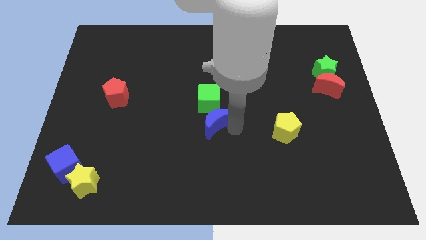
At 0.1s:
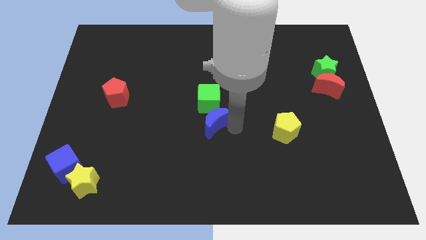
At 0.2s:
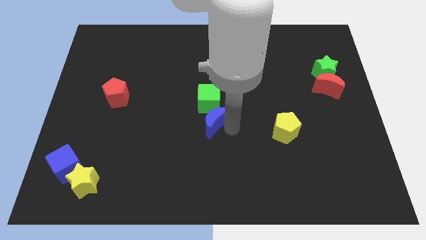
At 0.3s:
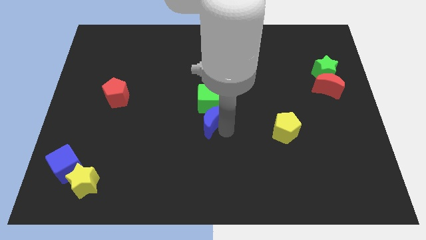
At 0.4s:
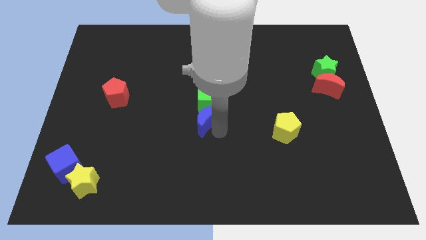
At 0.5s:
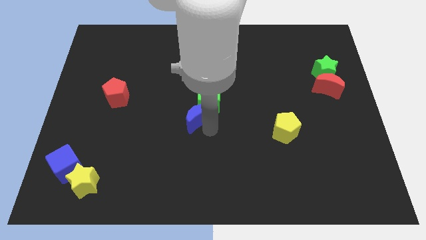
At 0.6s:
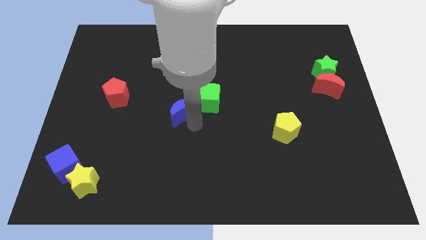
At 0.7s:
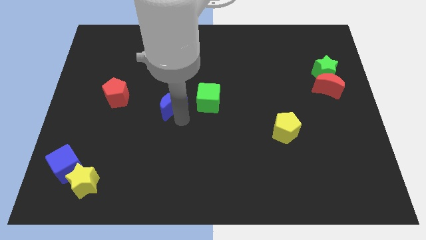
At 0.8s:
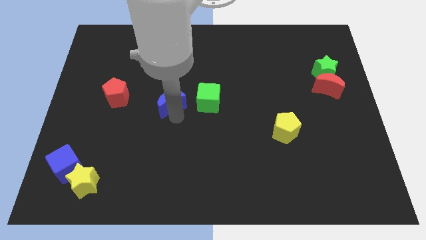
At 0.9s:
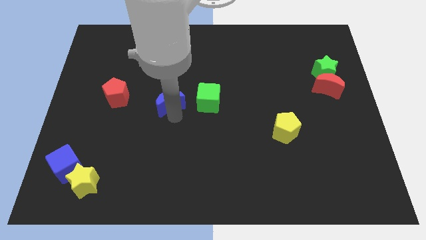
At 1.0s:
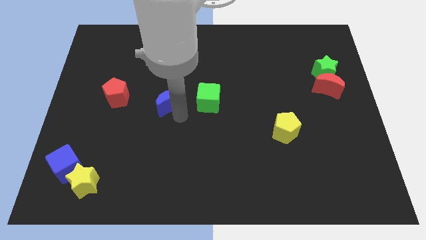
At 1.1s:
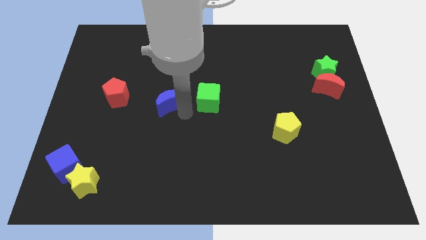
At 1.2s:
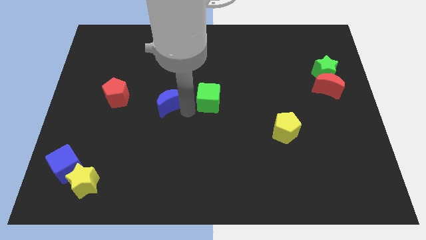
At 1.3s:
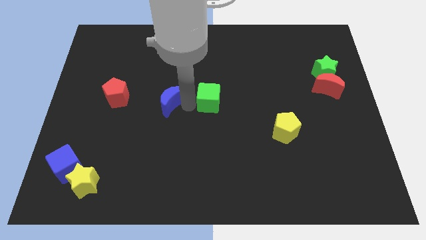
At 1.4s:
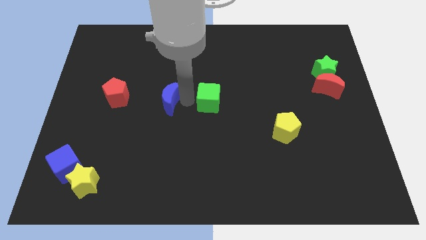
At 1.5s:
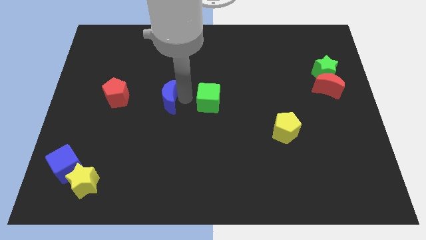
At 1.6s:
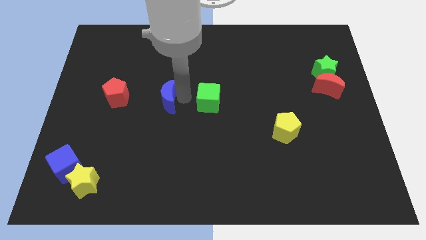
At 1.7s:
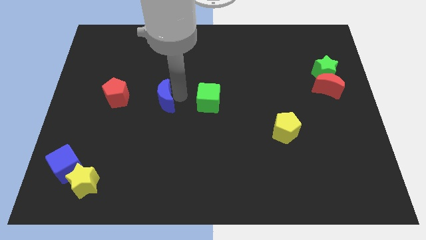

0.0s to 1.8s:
place the blue moon between the red pentagon and the green square

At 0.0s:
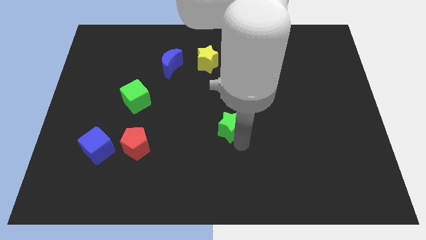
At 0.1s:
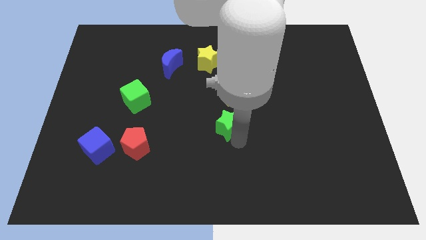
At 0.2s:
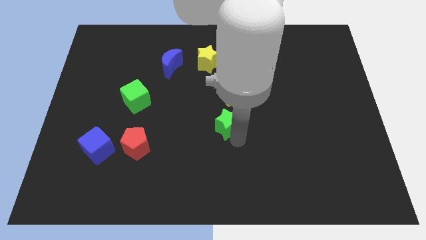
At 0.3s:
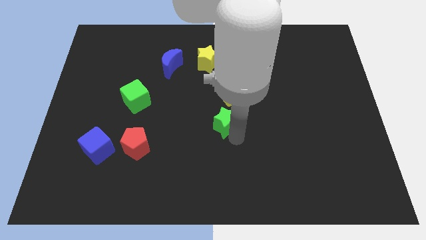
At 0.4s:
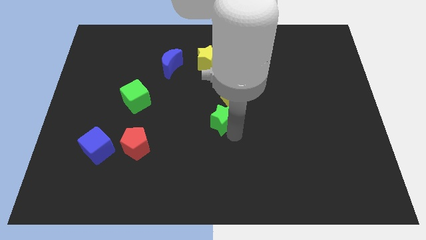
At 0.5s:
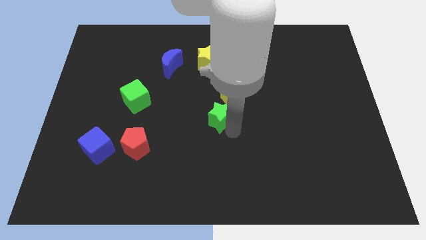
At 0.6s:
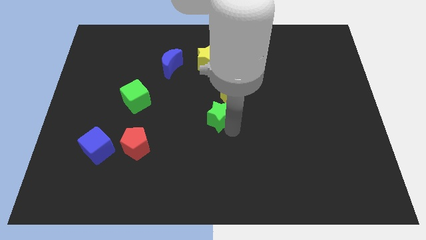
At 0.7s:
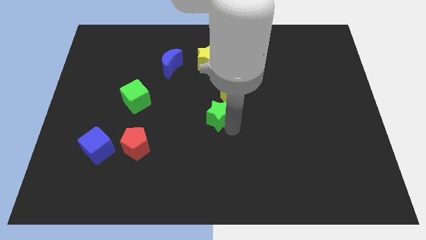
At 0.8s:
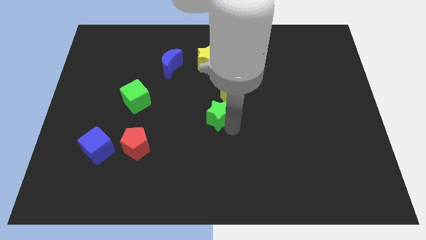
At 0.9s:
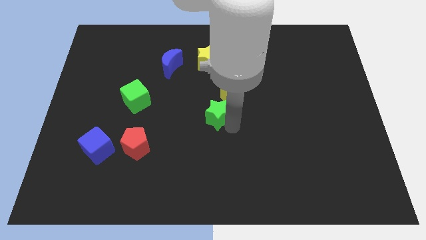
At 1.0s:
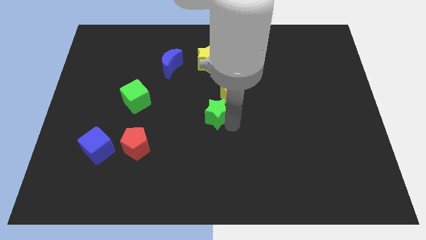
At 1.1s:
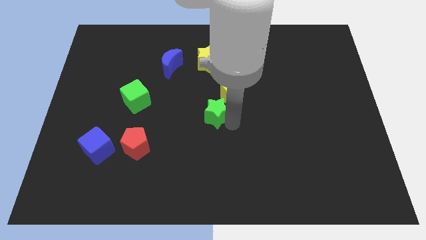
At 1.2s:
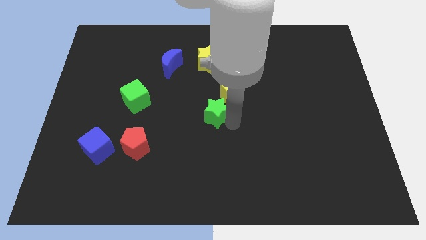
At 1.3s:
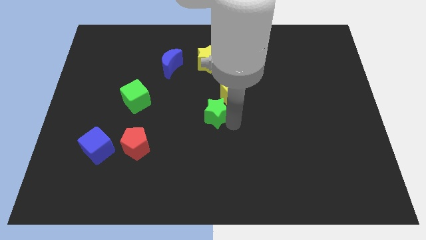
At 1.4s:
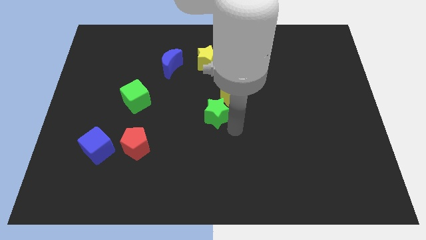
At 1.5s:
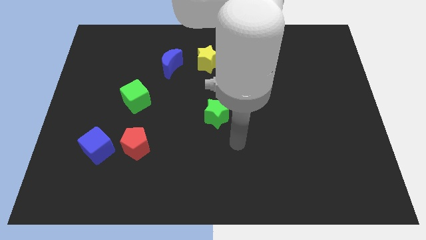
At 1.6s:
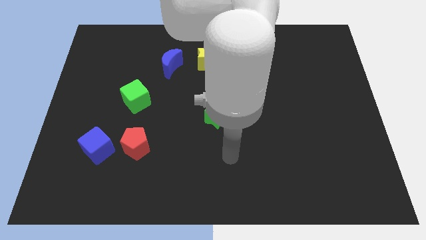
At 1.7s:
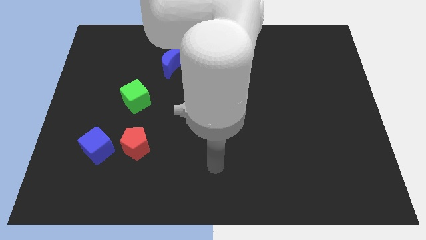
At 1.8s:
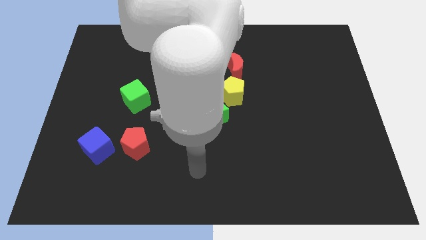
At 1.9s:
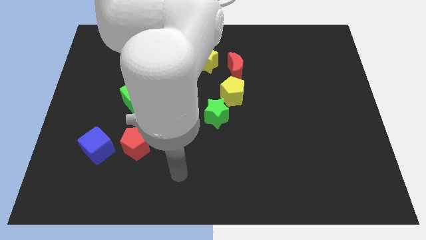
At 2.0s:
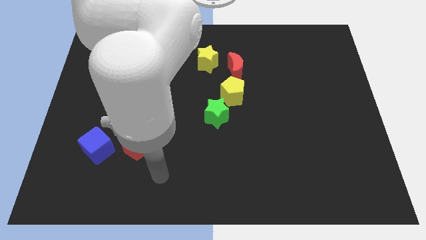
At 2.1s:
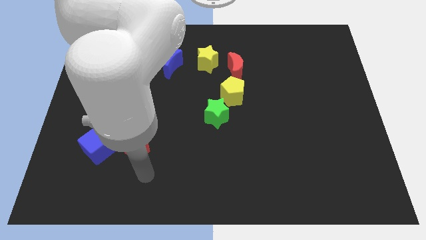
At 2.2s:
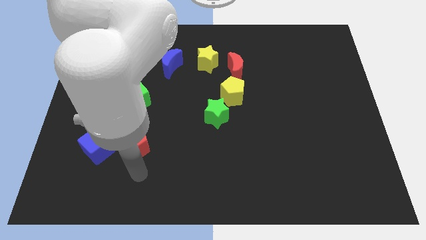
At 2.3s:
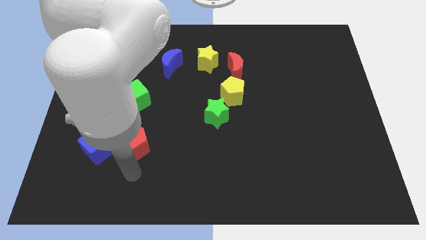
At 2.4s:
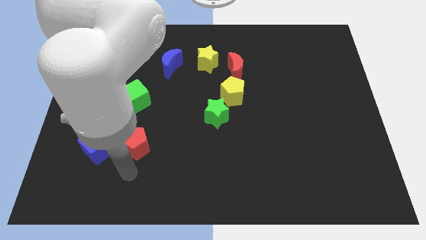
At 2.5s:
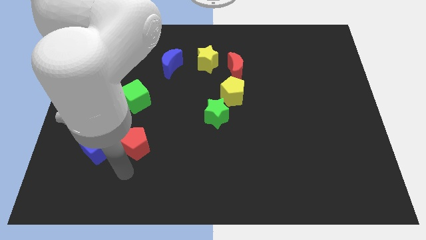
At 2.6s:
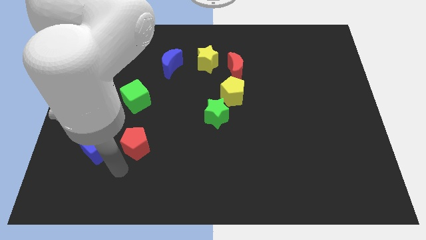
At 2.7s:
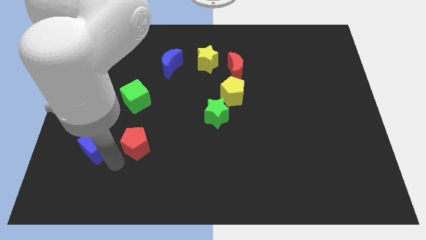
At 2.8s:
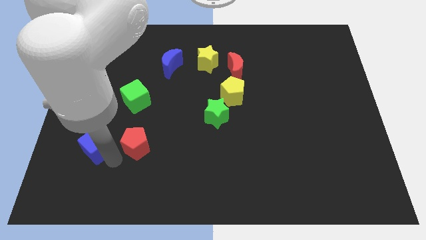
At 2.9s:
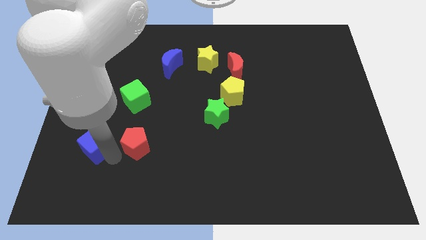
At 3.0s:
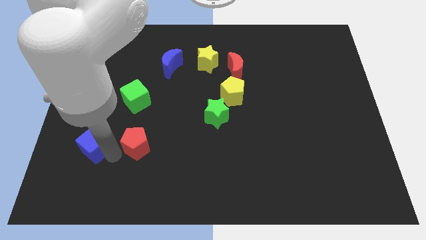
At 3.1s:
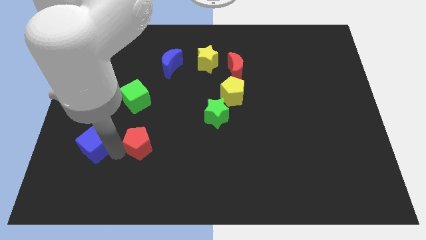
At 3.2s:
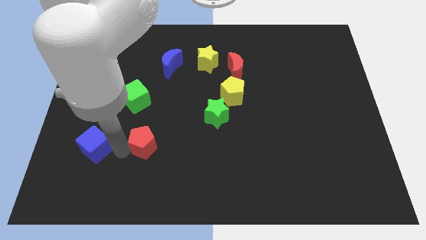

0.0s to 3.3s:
move the arm to the red pentagon

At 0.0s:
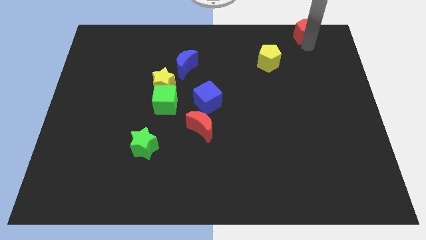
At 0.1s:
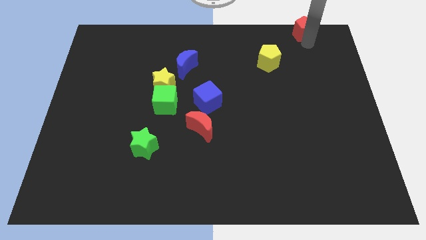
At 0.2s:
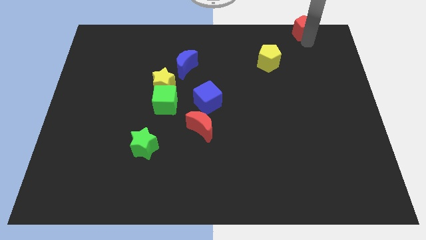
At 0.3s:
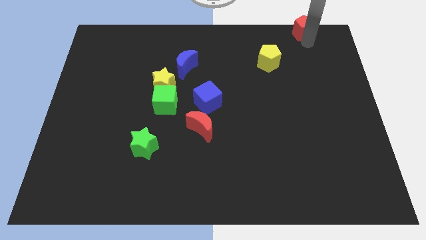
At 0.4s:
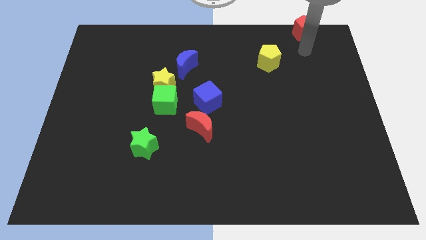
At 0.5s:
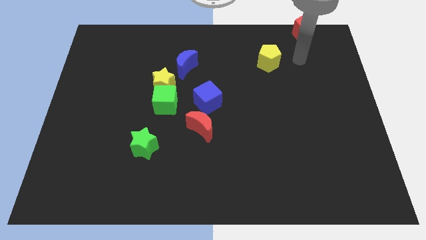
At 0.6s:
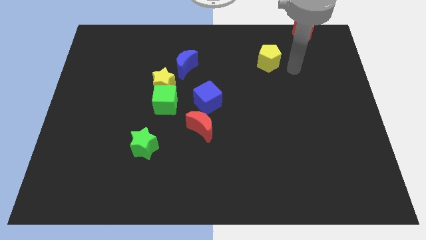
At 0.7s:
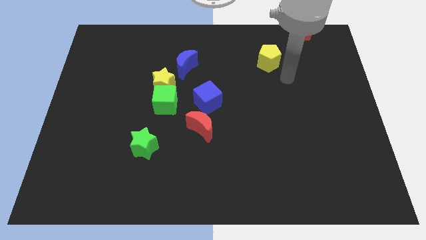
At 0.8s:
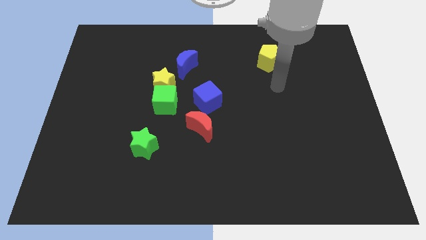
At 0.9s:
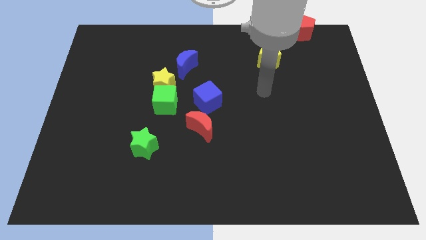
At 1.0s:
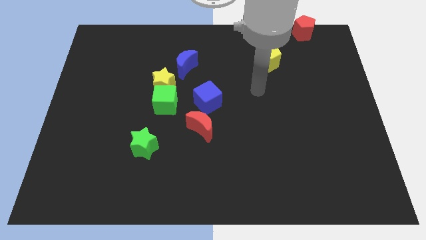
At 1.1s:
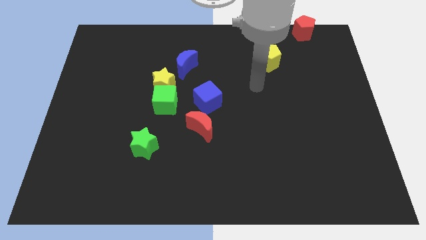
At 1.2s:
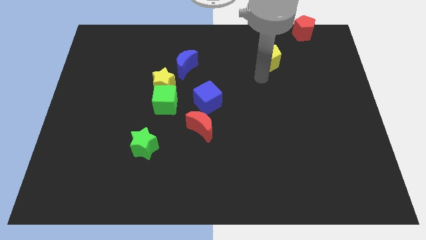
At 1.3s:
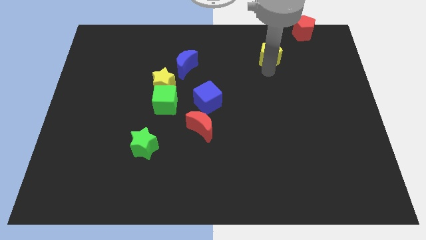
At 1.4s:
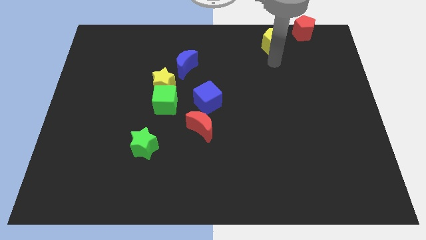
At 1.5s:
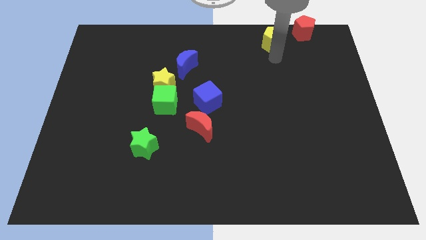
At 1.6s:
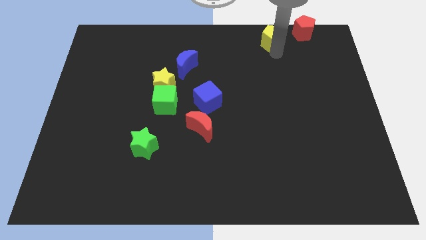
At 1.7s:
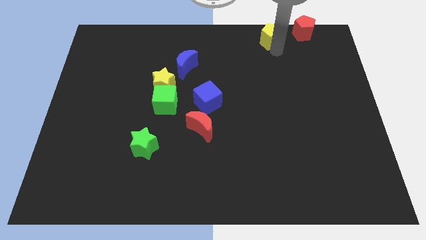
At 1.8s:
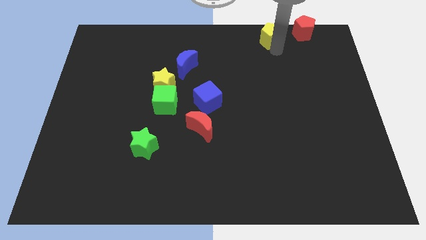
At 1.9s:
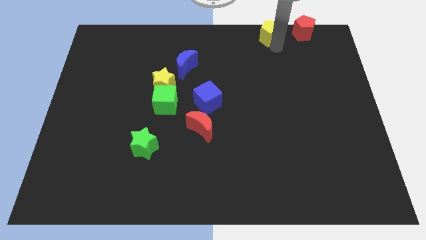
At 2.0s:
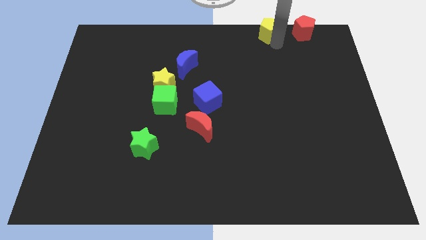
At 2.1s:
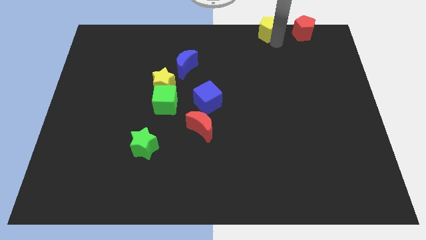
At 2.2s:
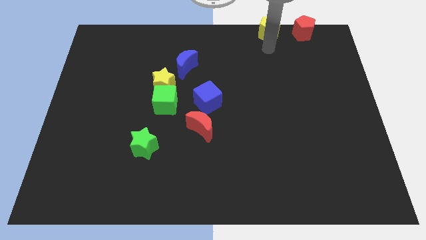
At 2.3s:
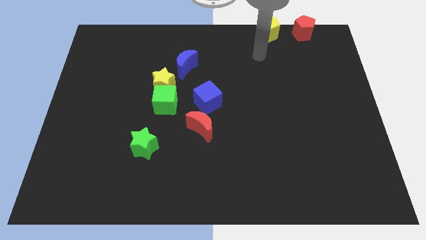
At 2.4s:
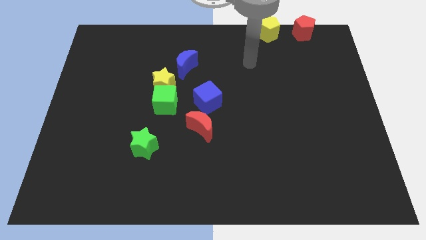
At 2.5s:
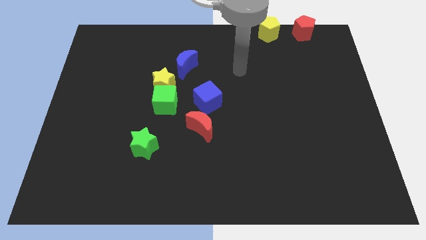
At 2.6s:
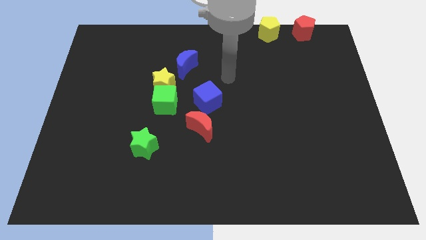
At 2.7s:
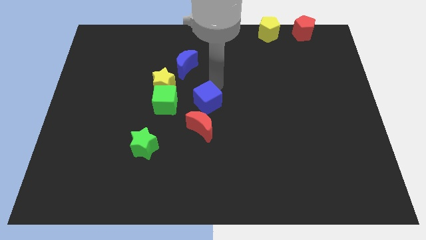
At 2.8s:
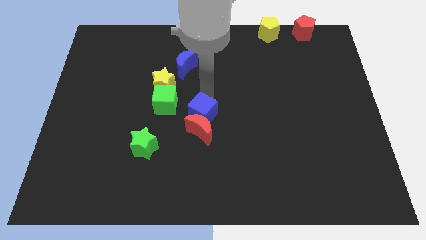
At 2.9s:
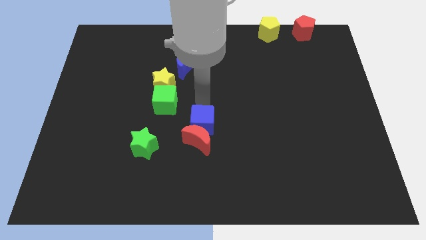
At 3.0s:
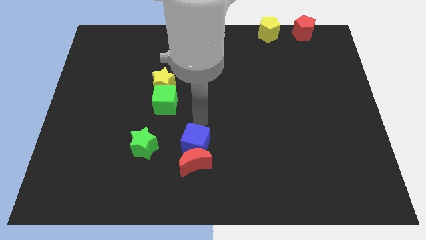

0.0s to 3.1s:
push blue cube slightly towards down

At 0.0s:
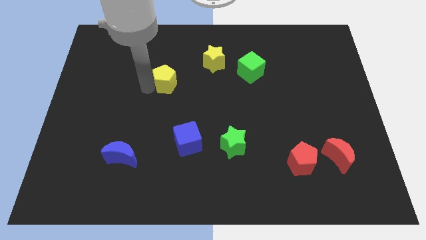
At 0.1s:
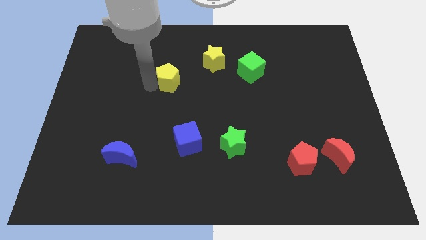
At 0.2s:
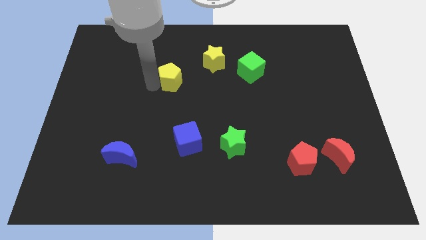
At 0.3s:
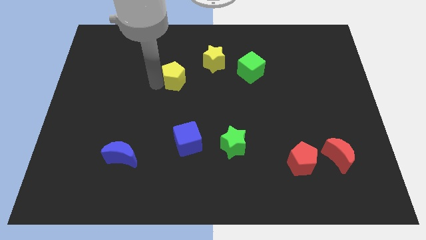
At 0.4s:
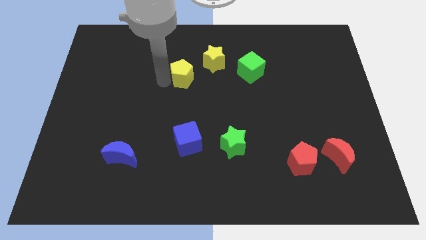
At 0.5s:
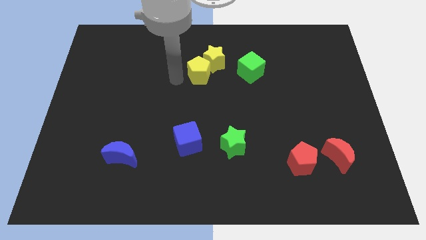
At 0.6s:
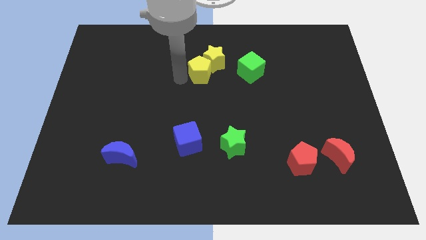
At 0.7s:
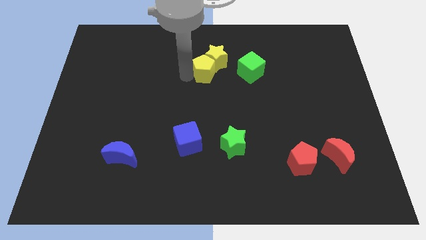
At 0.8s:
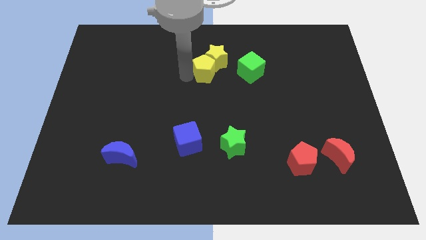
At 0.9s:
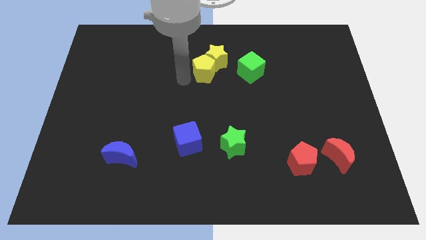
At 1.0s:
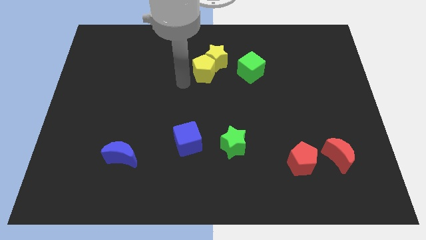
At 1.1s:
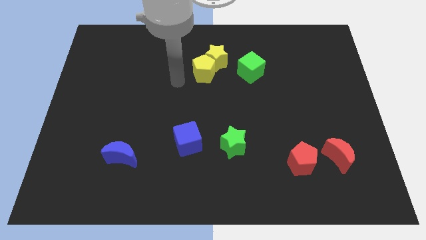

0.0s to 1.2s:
push the yellow pentagon into the yellow star

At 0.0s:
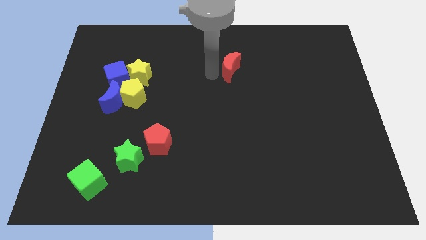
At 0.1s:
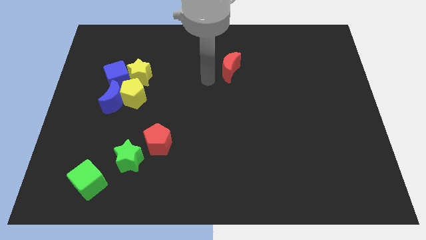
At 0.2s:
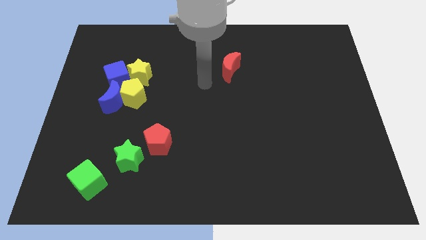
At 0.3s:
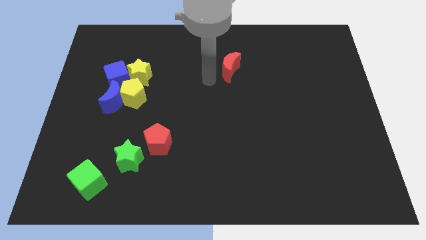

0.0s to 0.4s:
drag the yellow star towards left and red crescent towards right
